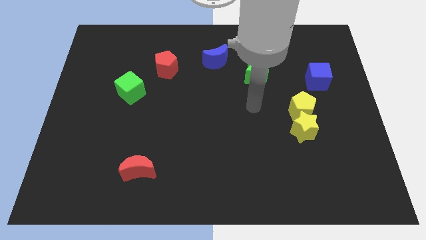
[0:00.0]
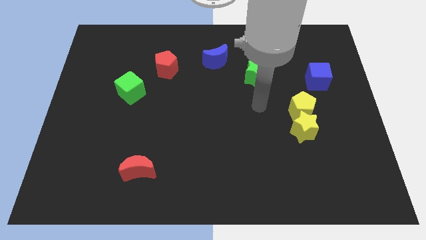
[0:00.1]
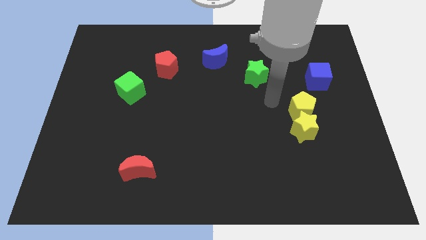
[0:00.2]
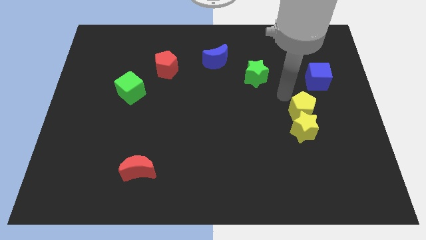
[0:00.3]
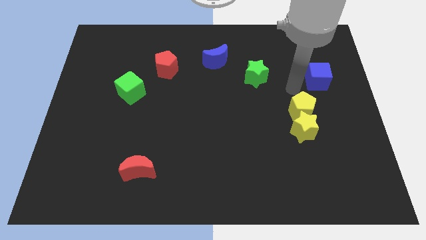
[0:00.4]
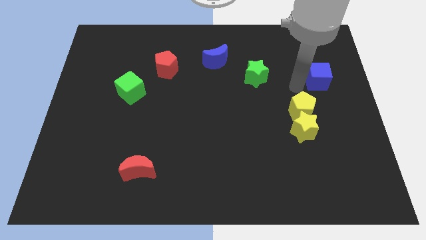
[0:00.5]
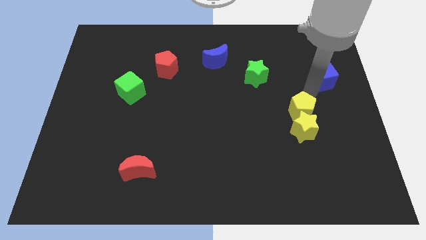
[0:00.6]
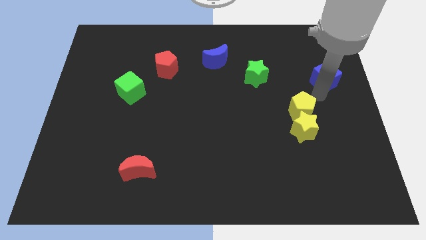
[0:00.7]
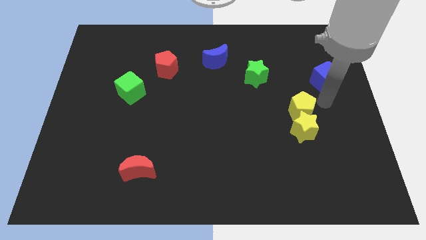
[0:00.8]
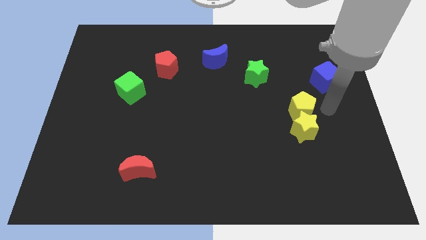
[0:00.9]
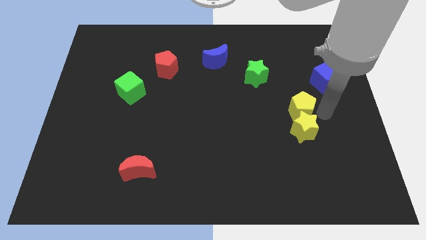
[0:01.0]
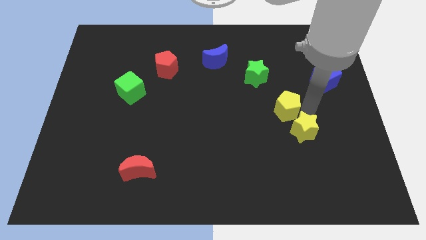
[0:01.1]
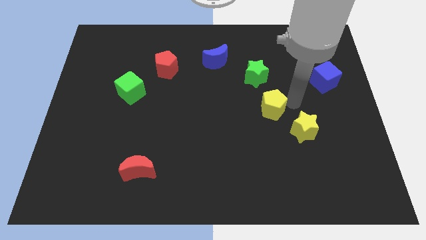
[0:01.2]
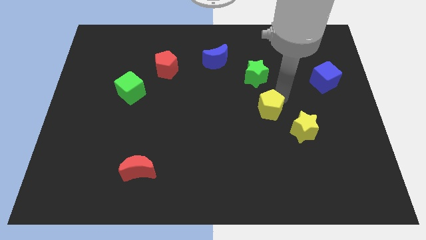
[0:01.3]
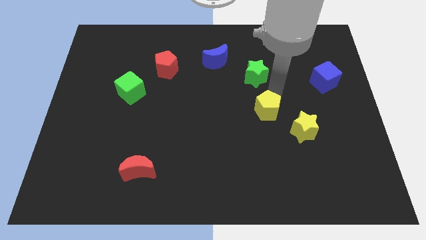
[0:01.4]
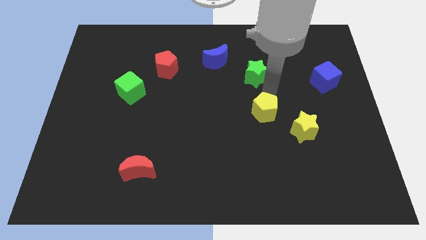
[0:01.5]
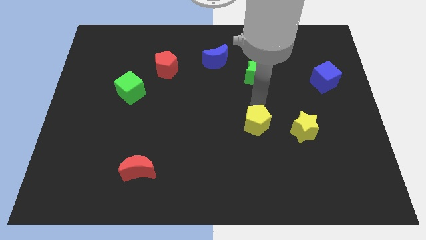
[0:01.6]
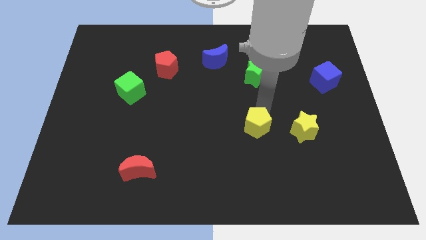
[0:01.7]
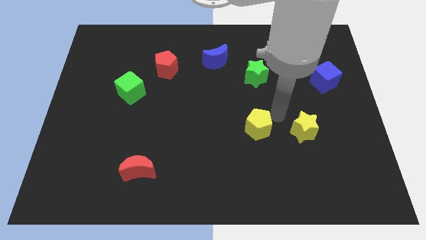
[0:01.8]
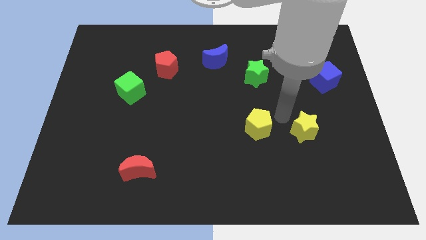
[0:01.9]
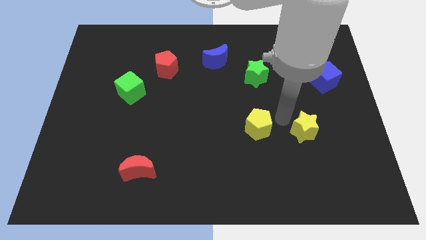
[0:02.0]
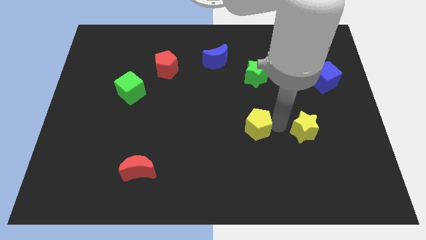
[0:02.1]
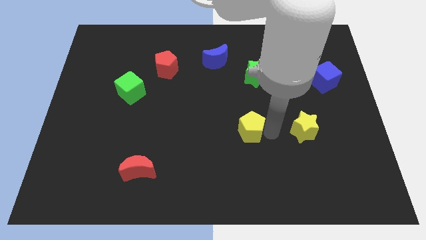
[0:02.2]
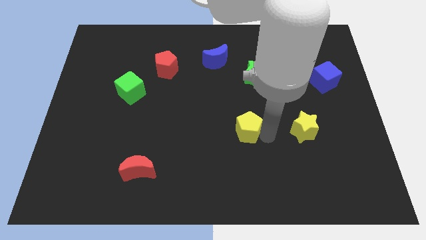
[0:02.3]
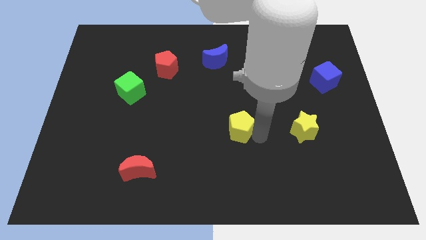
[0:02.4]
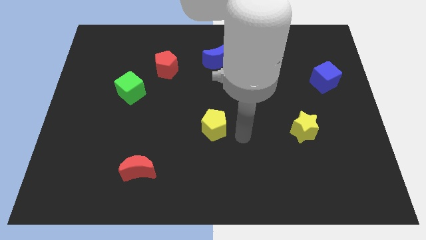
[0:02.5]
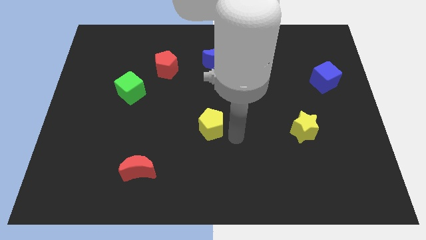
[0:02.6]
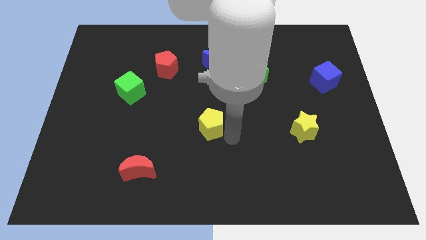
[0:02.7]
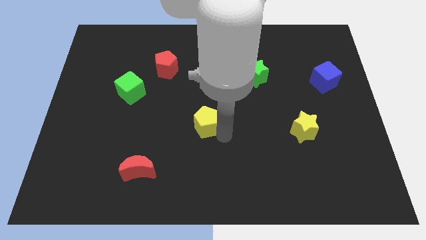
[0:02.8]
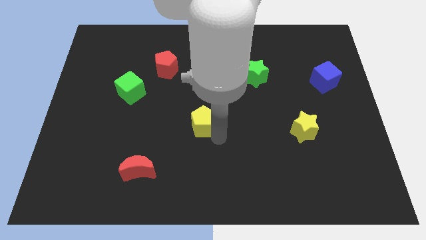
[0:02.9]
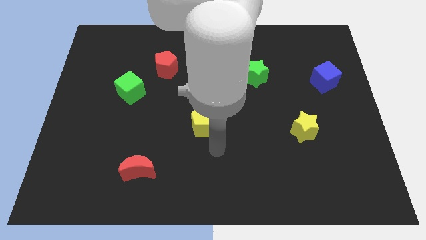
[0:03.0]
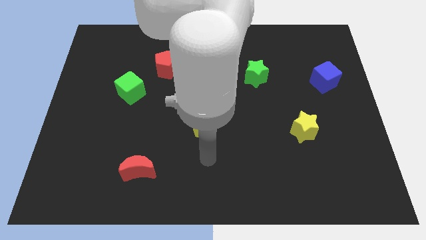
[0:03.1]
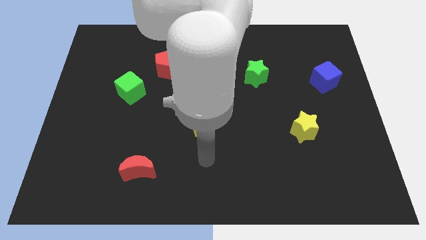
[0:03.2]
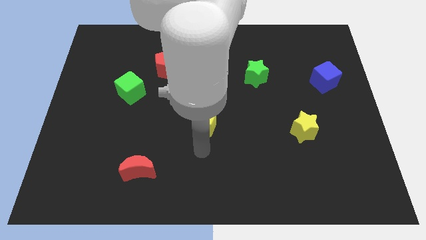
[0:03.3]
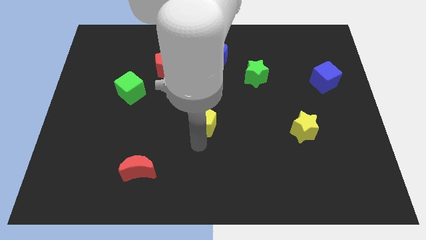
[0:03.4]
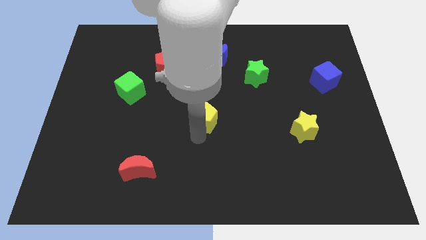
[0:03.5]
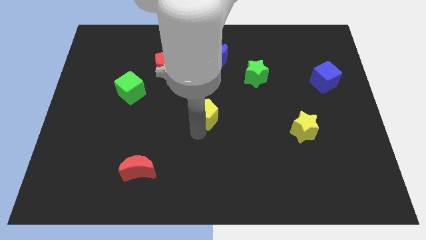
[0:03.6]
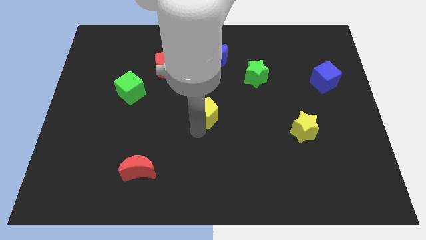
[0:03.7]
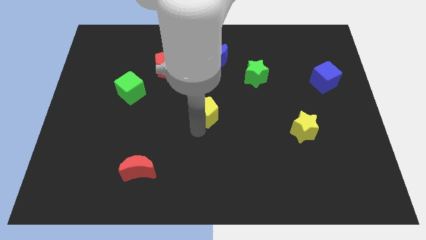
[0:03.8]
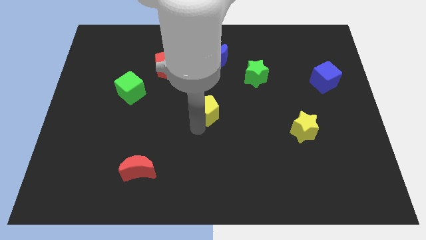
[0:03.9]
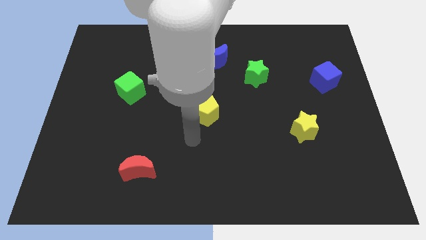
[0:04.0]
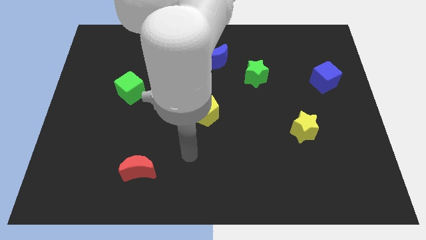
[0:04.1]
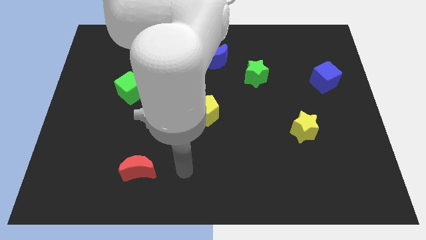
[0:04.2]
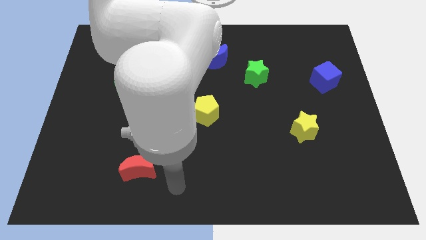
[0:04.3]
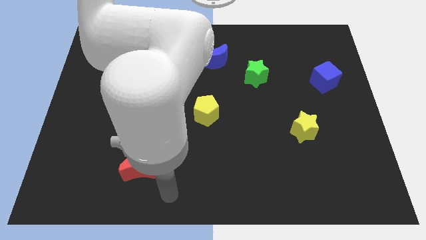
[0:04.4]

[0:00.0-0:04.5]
place the yellow pentagon at the center of the board

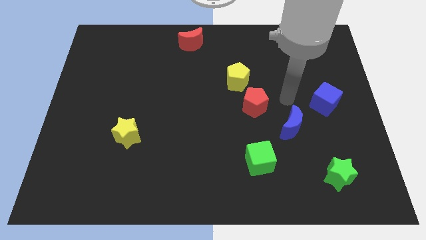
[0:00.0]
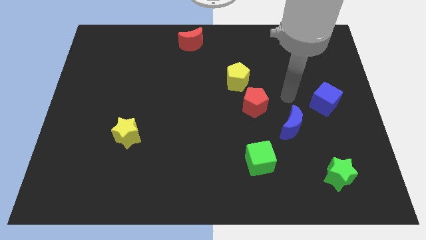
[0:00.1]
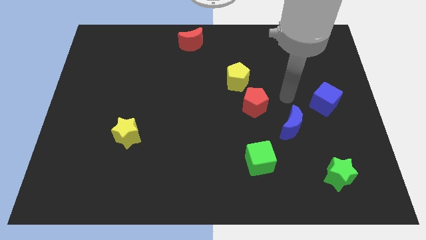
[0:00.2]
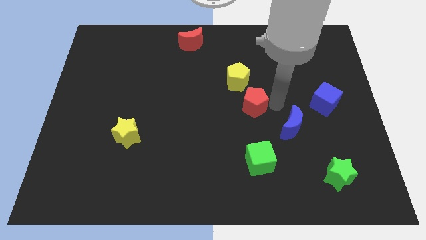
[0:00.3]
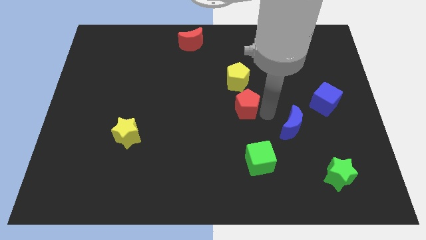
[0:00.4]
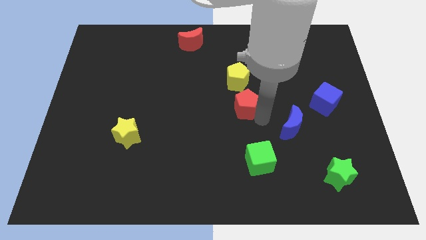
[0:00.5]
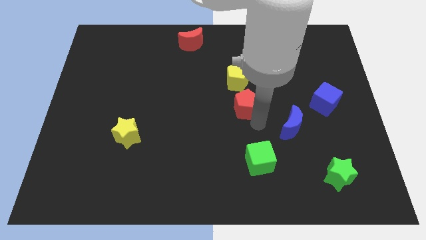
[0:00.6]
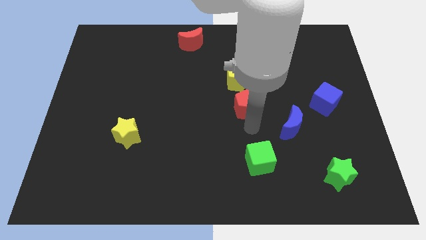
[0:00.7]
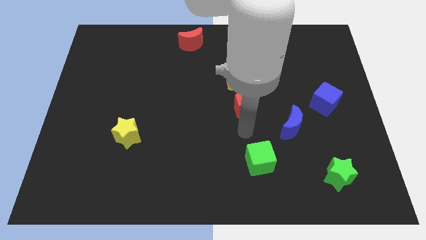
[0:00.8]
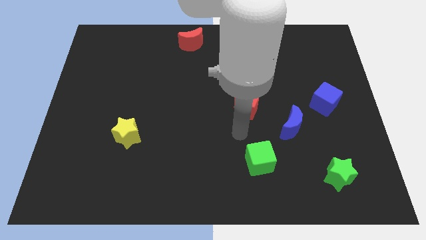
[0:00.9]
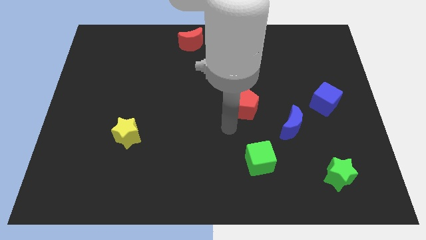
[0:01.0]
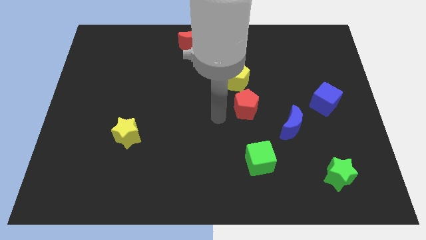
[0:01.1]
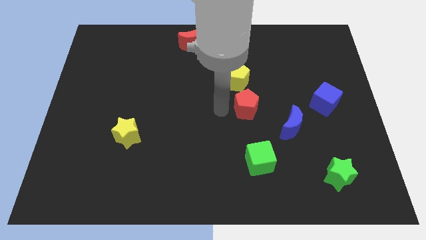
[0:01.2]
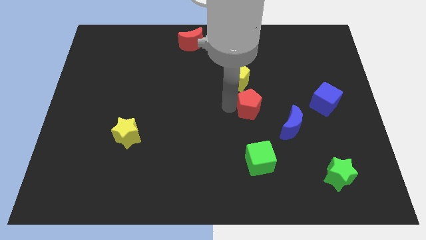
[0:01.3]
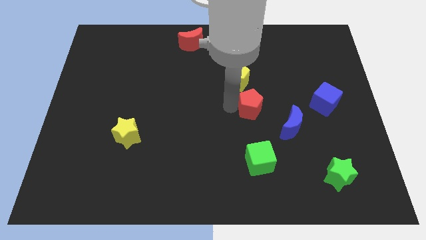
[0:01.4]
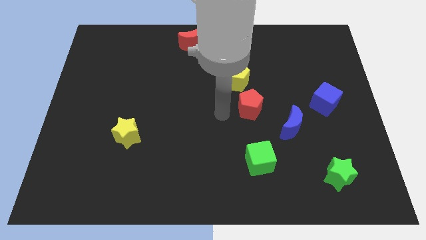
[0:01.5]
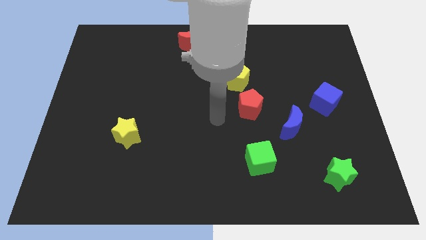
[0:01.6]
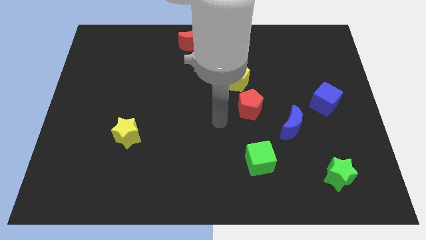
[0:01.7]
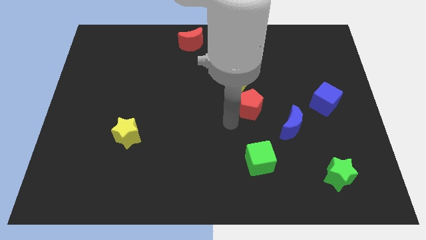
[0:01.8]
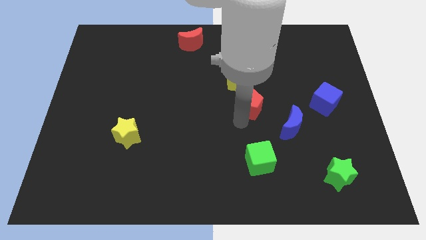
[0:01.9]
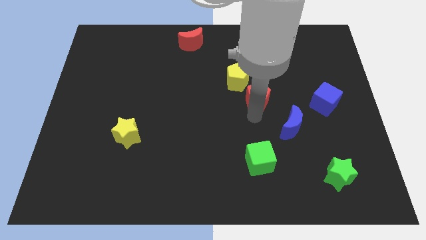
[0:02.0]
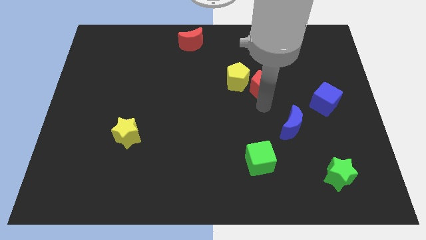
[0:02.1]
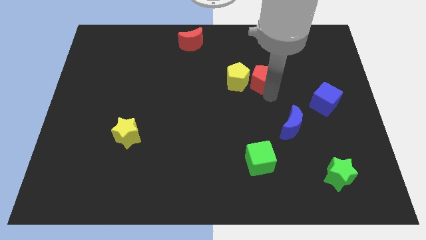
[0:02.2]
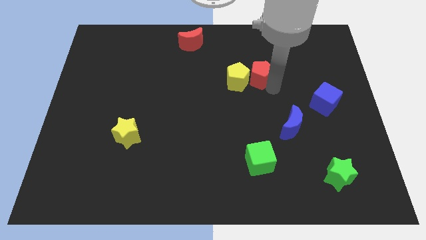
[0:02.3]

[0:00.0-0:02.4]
move red pentagon to the right of the yellow pentagon

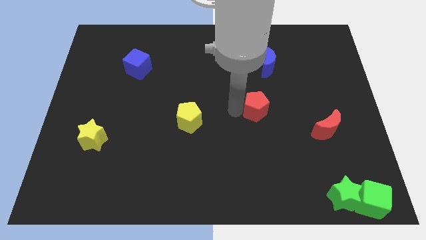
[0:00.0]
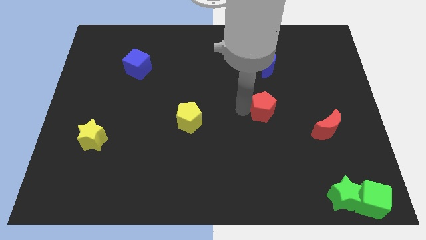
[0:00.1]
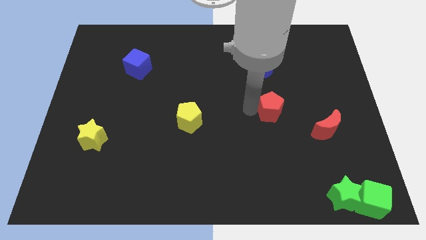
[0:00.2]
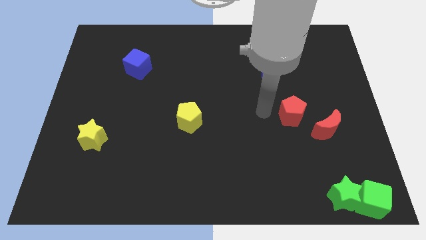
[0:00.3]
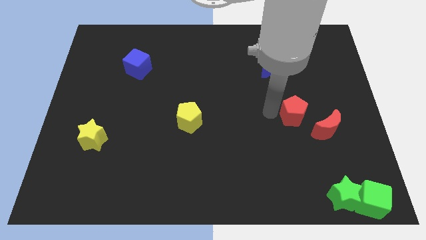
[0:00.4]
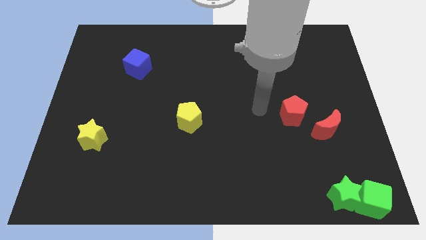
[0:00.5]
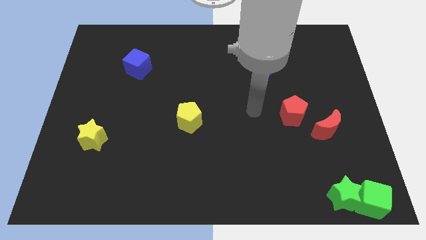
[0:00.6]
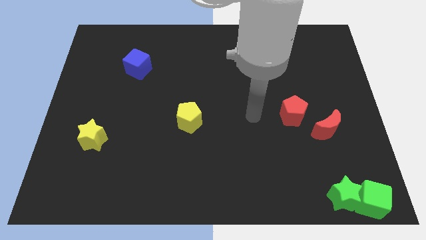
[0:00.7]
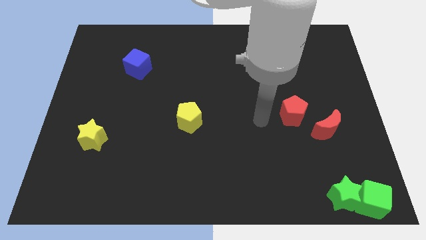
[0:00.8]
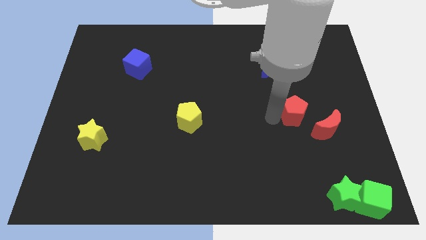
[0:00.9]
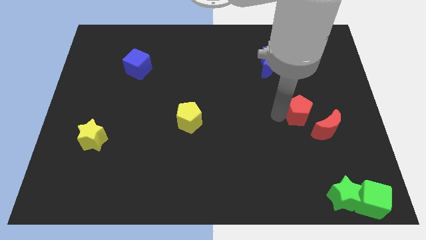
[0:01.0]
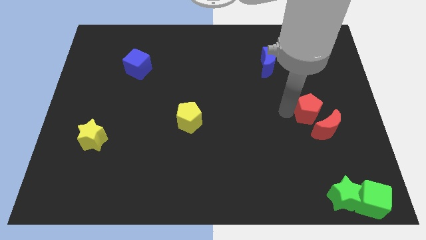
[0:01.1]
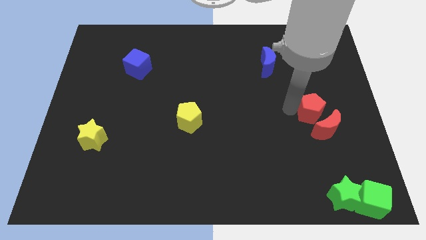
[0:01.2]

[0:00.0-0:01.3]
push the red pentagon towards the red moon

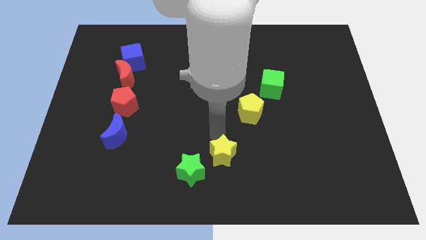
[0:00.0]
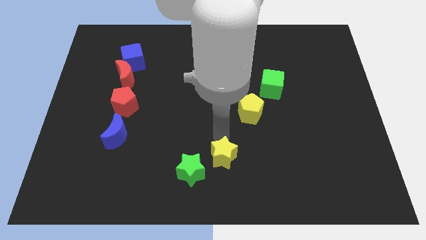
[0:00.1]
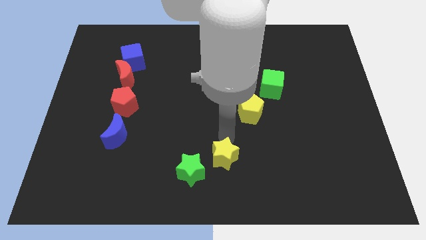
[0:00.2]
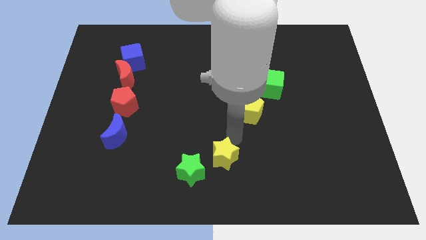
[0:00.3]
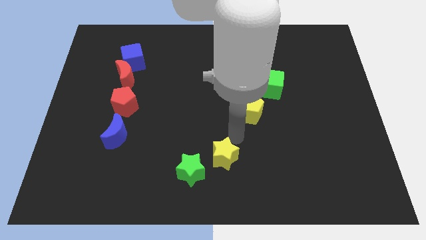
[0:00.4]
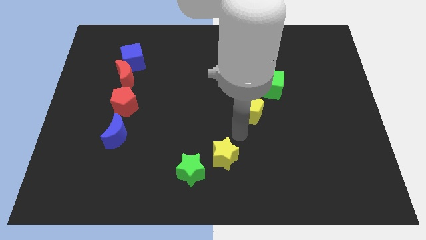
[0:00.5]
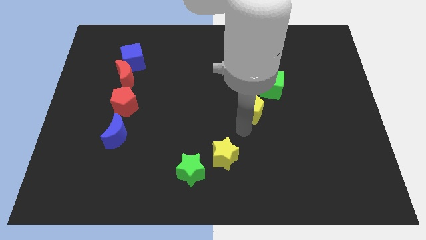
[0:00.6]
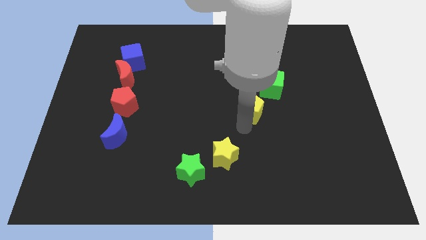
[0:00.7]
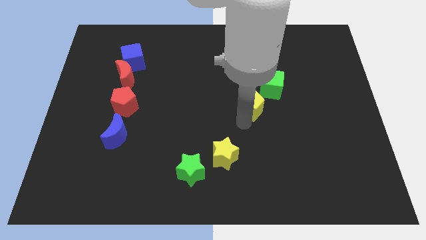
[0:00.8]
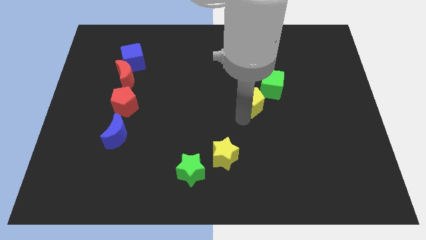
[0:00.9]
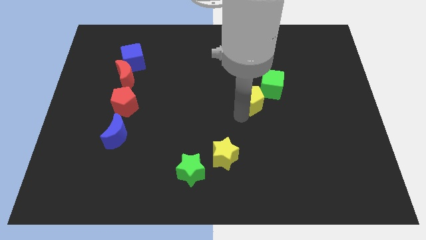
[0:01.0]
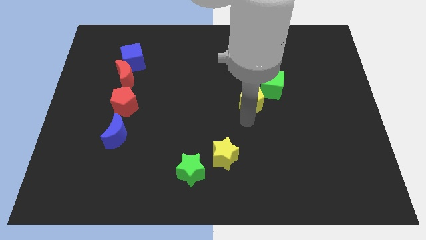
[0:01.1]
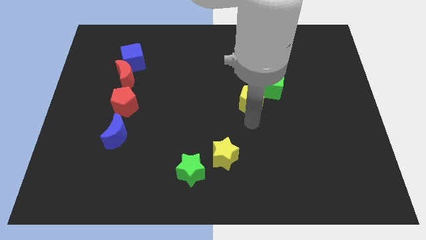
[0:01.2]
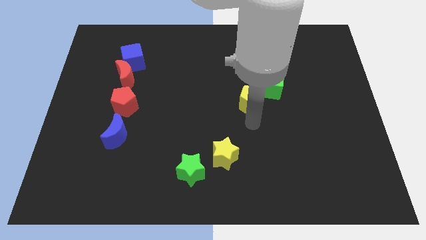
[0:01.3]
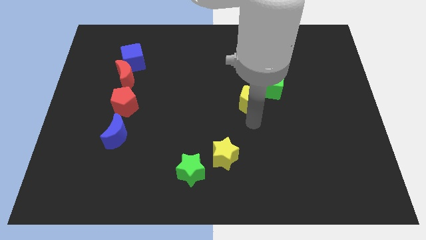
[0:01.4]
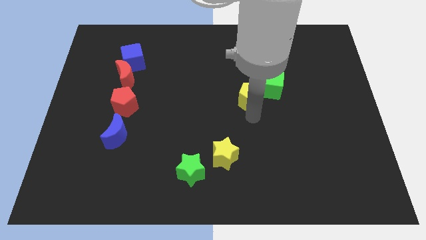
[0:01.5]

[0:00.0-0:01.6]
place yellow pentagon to the bottom left of the green cube
